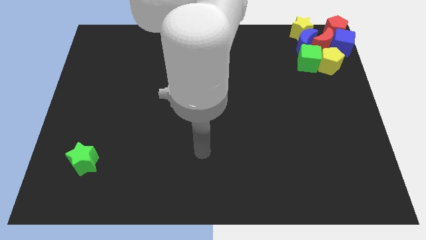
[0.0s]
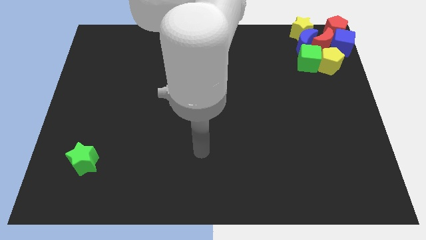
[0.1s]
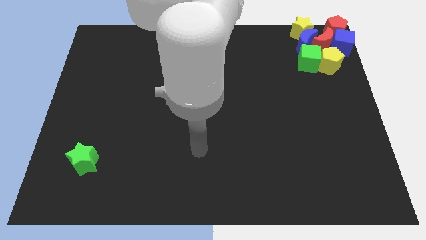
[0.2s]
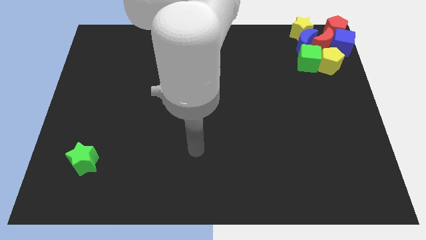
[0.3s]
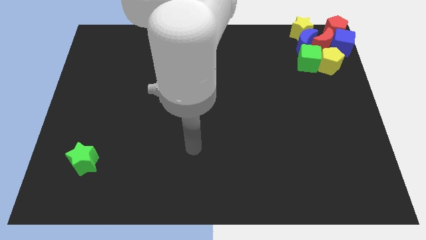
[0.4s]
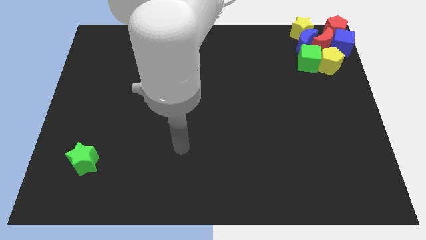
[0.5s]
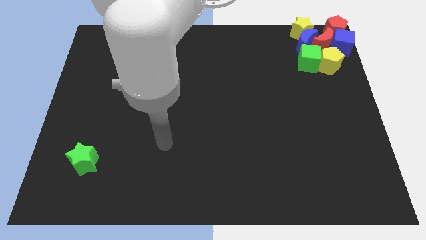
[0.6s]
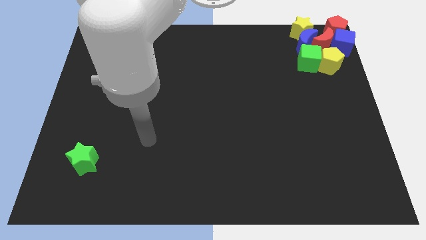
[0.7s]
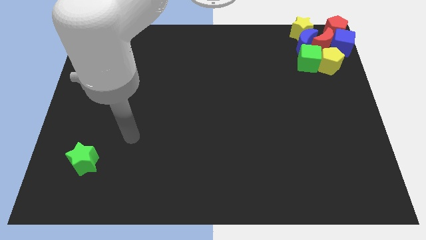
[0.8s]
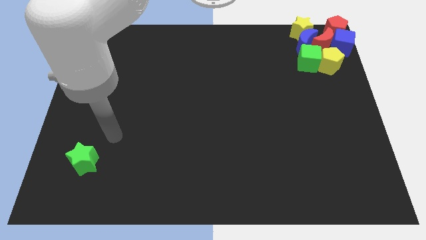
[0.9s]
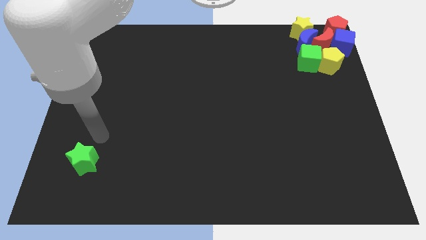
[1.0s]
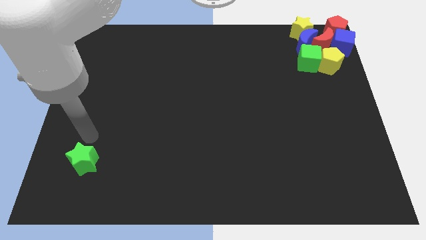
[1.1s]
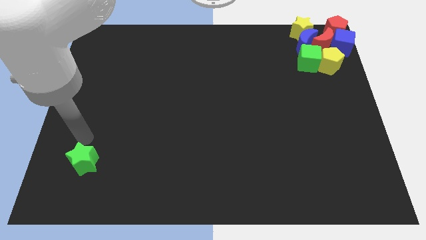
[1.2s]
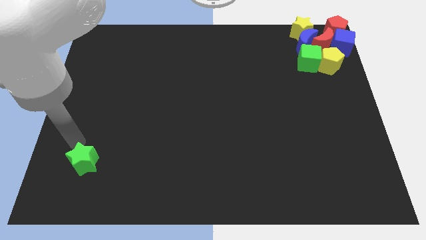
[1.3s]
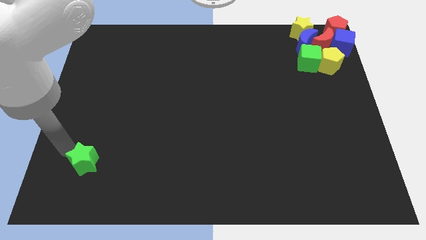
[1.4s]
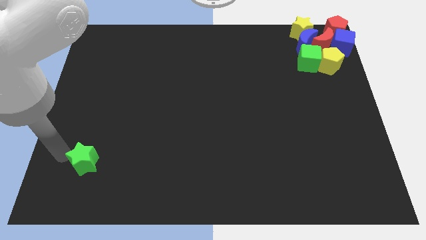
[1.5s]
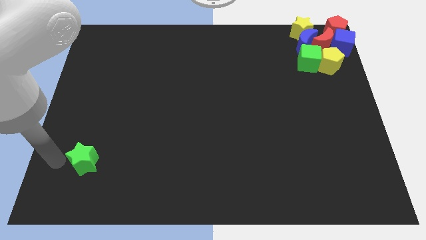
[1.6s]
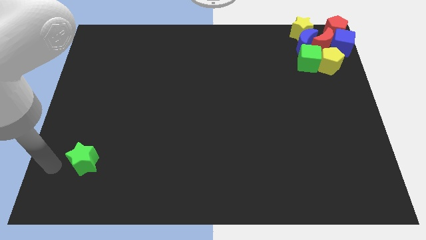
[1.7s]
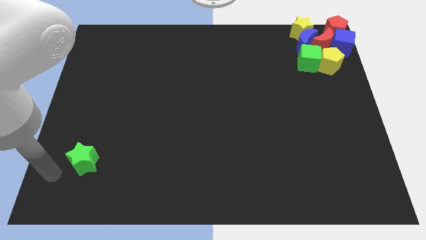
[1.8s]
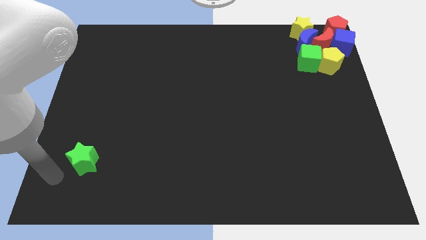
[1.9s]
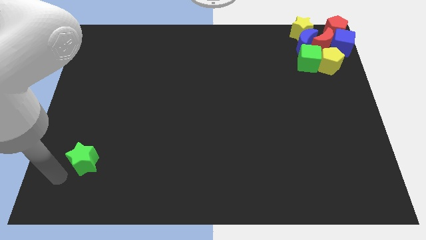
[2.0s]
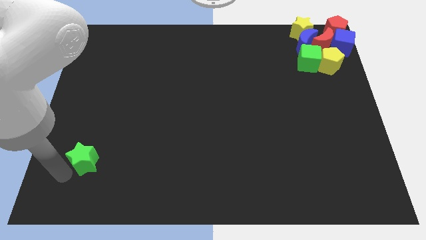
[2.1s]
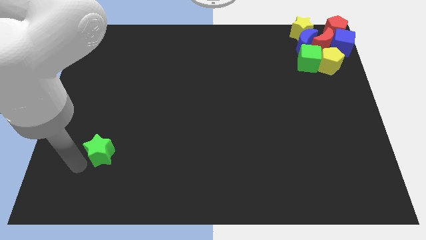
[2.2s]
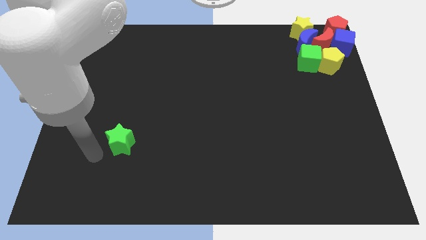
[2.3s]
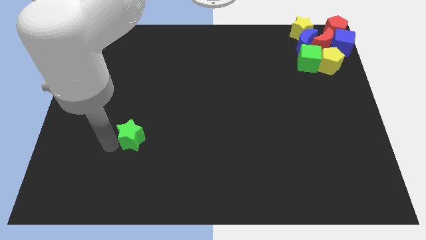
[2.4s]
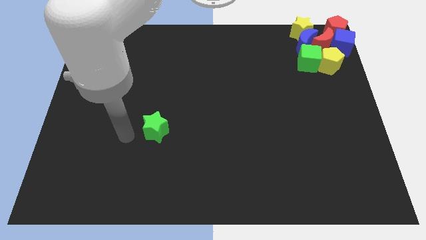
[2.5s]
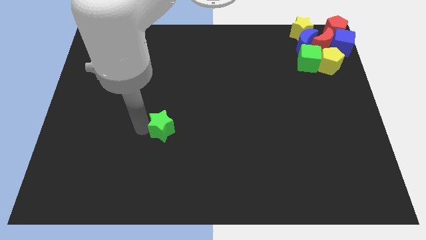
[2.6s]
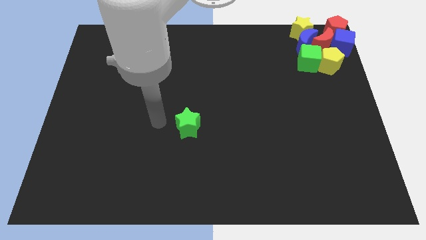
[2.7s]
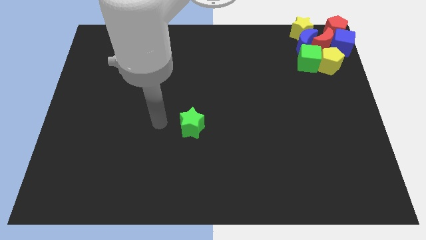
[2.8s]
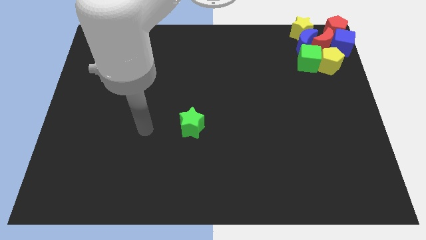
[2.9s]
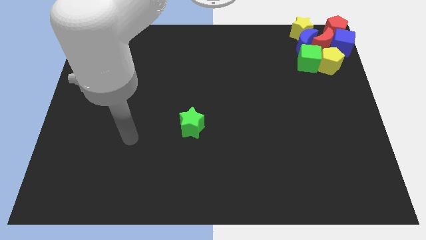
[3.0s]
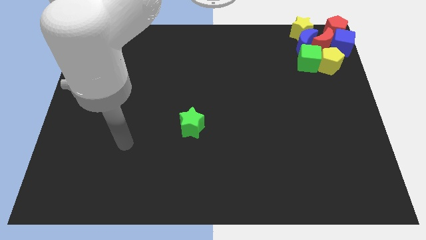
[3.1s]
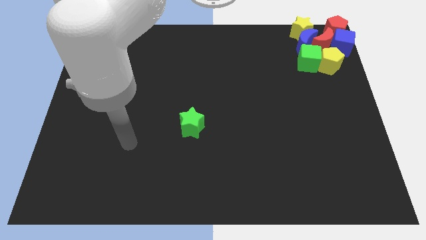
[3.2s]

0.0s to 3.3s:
move the arm towards green star

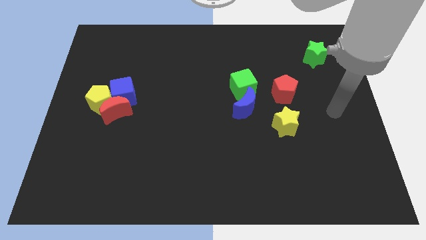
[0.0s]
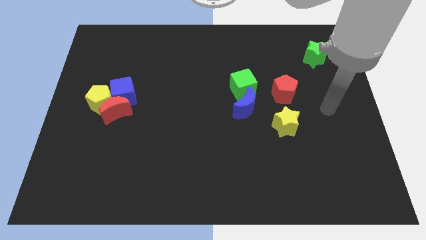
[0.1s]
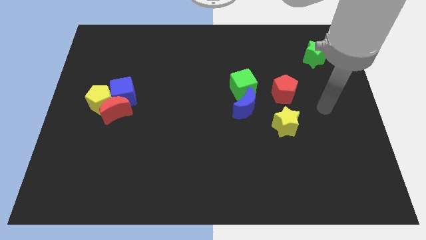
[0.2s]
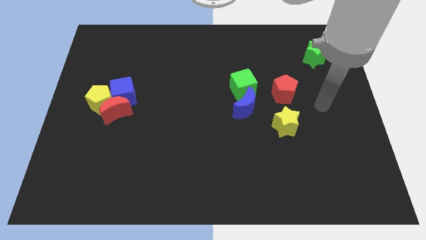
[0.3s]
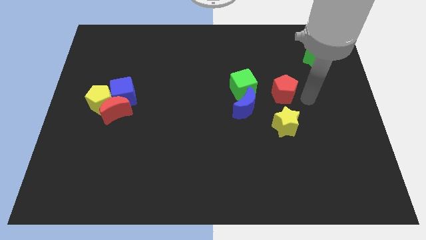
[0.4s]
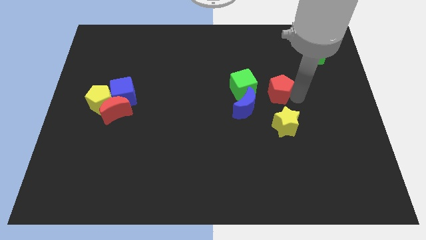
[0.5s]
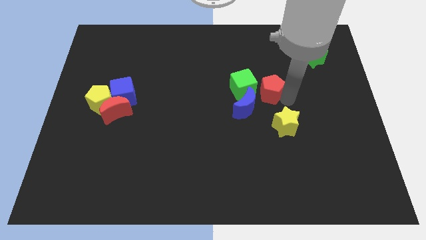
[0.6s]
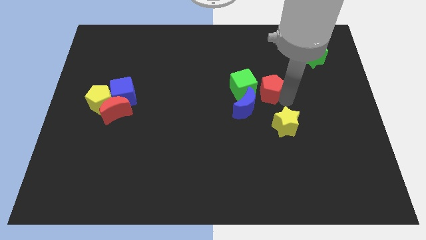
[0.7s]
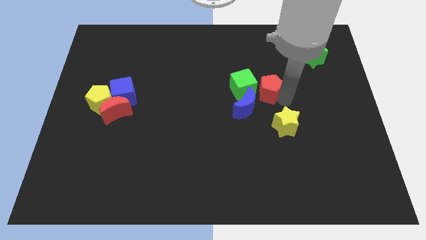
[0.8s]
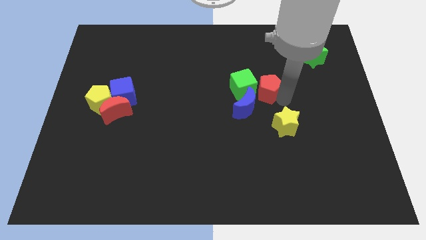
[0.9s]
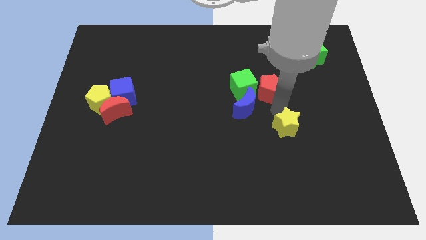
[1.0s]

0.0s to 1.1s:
push the red pentagon close to the green cube

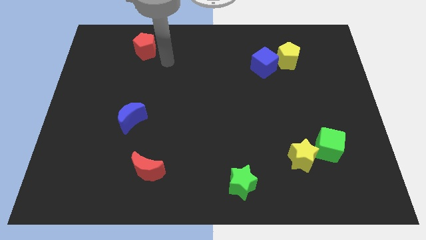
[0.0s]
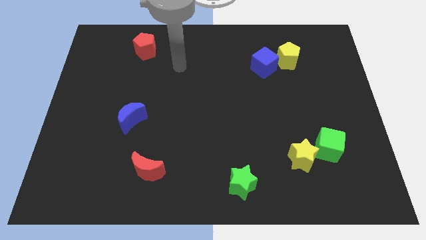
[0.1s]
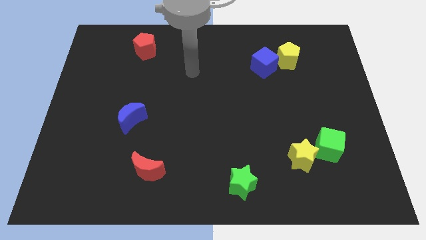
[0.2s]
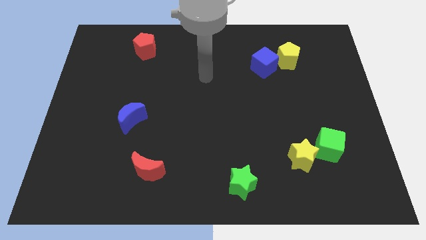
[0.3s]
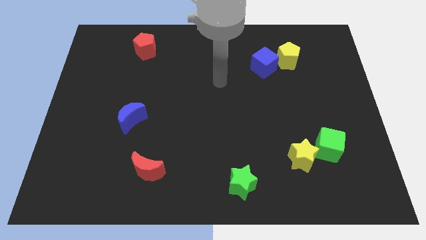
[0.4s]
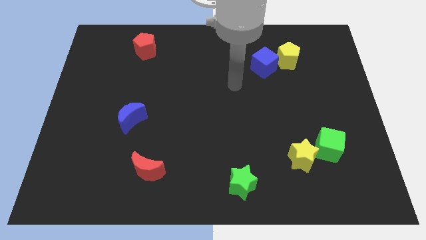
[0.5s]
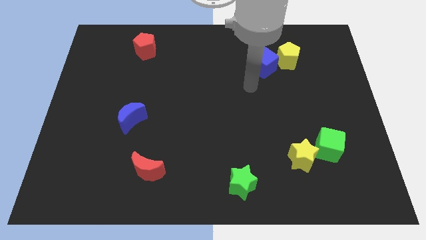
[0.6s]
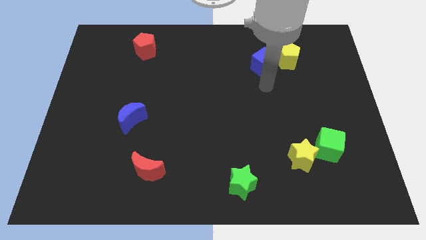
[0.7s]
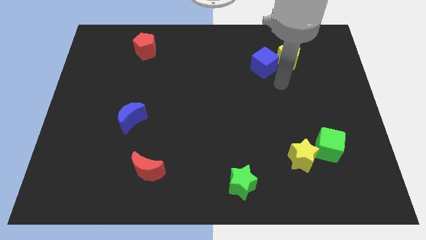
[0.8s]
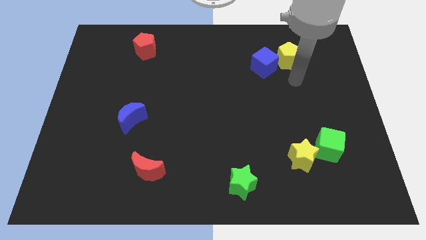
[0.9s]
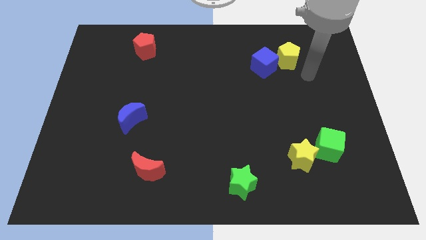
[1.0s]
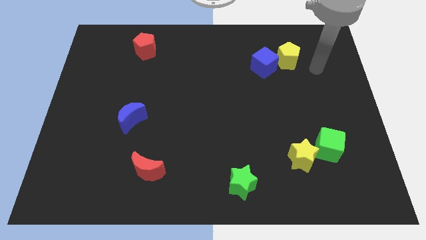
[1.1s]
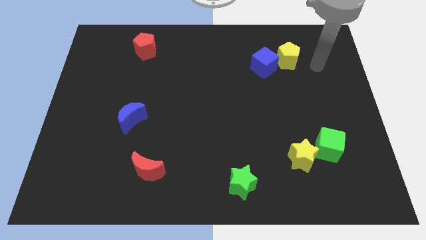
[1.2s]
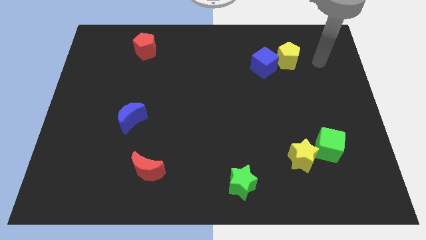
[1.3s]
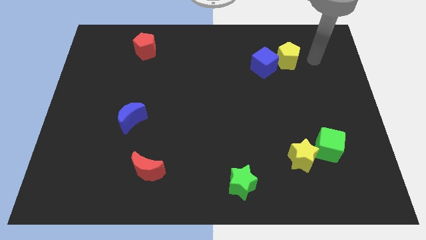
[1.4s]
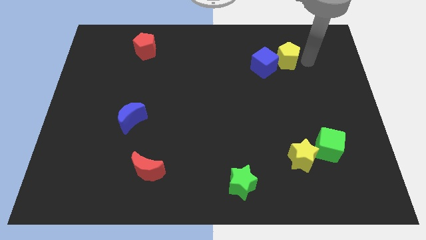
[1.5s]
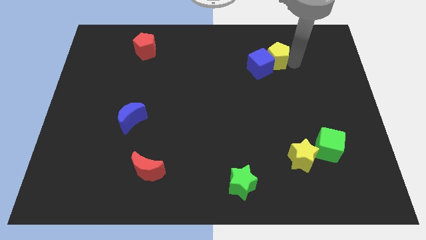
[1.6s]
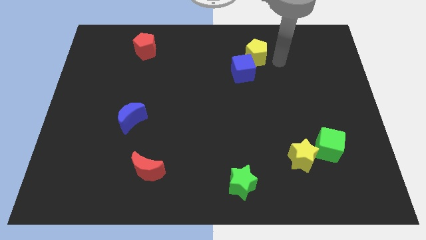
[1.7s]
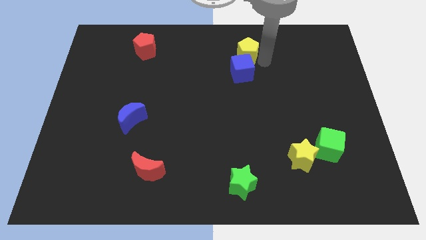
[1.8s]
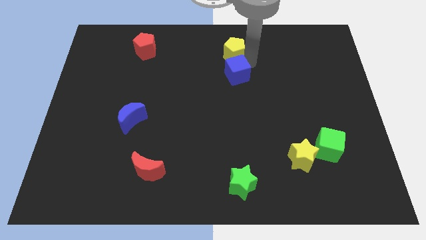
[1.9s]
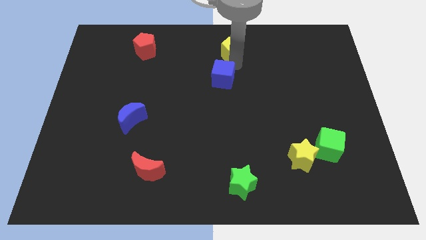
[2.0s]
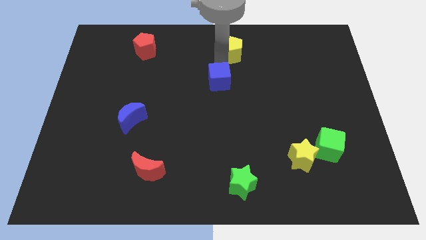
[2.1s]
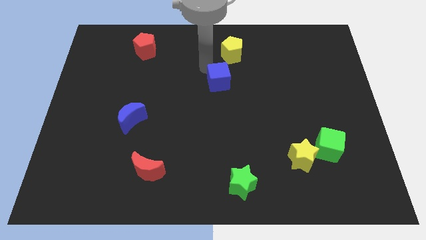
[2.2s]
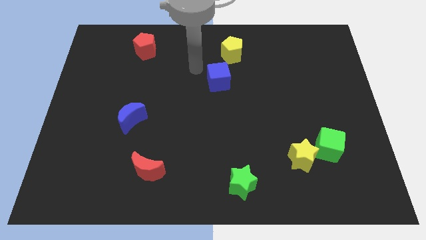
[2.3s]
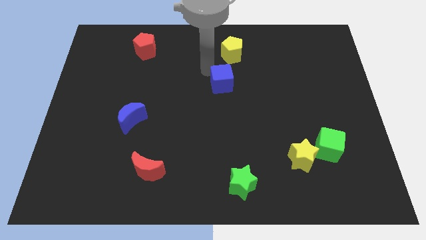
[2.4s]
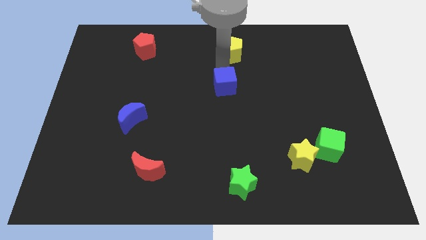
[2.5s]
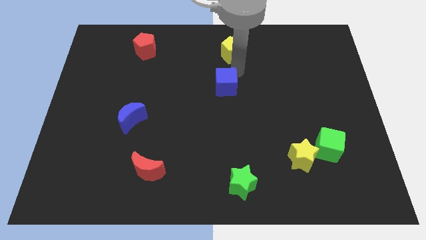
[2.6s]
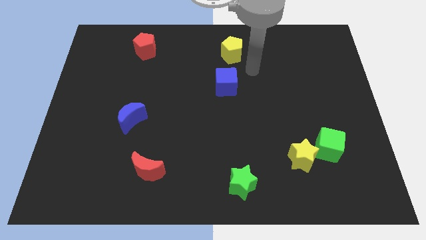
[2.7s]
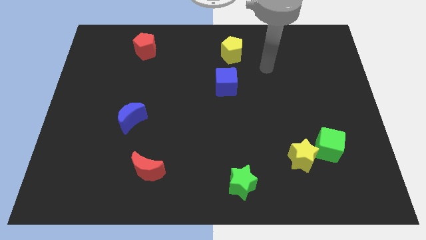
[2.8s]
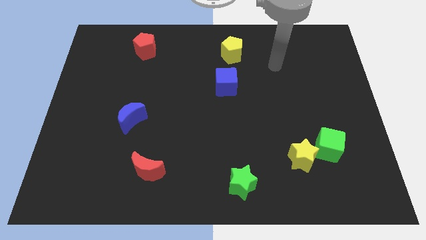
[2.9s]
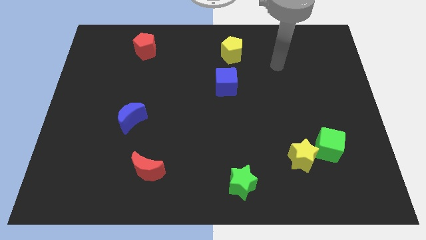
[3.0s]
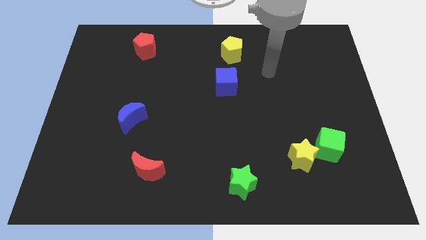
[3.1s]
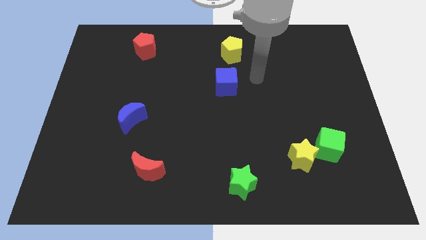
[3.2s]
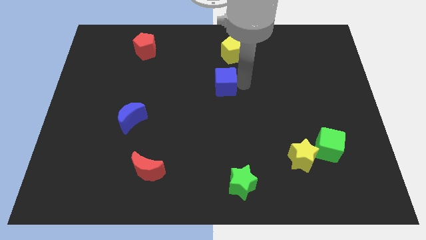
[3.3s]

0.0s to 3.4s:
separate blue cube from yellow pentagon

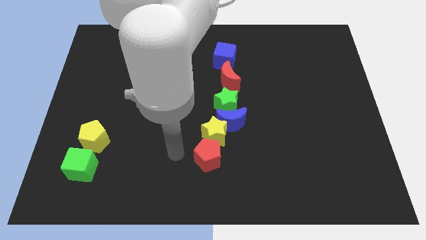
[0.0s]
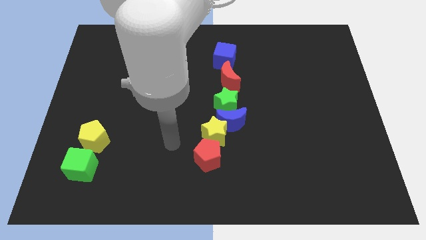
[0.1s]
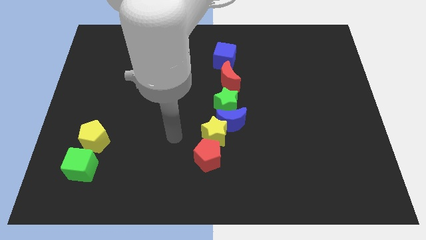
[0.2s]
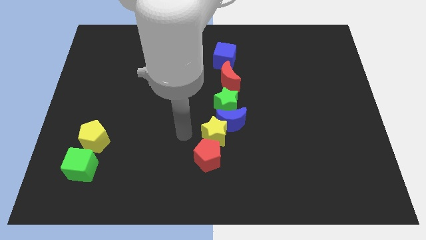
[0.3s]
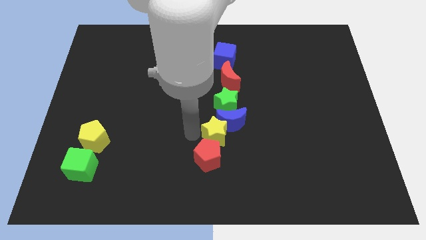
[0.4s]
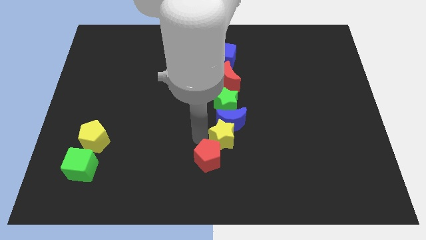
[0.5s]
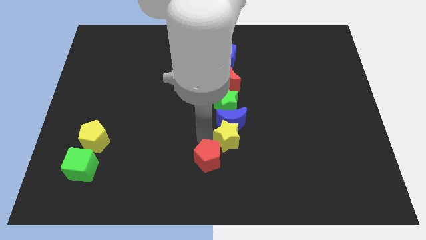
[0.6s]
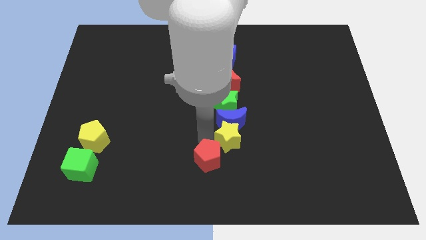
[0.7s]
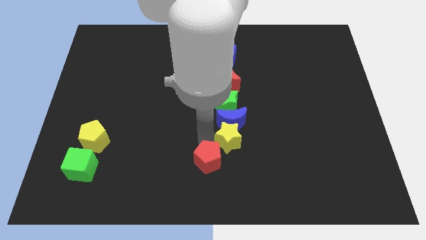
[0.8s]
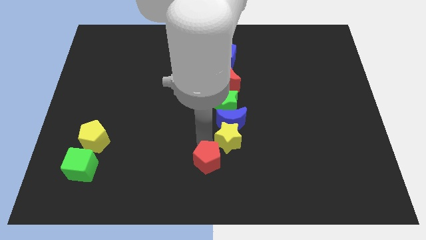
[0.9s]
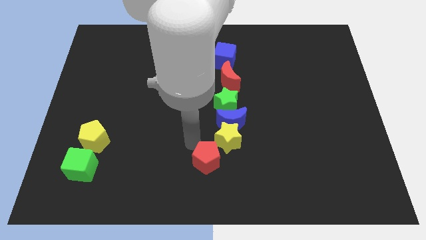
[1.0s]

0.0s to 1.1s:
place the yellow star below the blue crescent

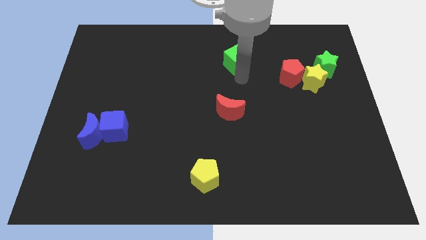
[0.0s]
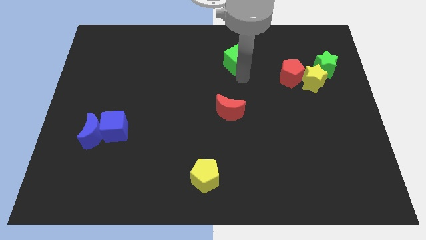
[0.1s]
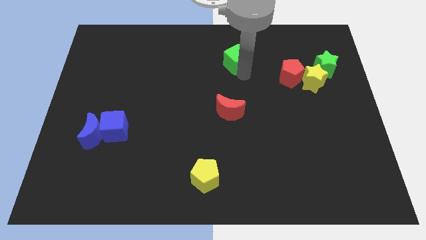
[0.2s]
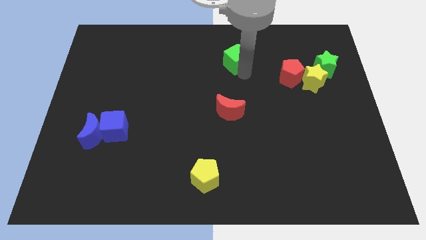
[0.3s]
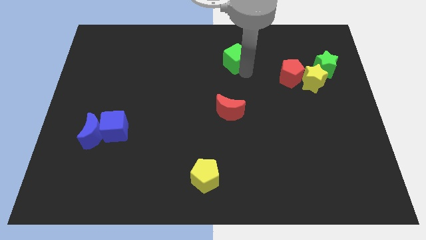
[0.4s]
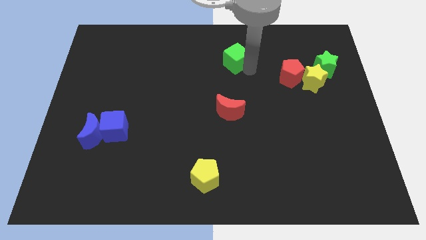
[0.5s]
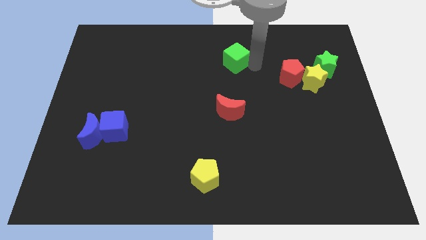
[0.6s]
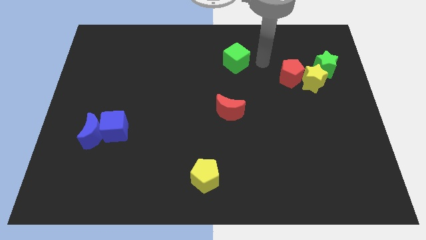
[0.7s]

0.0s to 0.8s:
slightly move the green cube up
